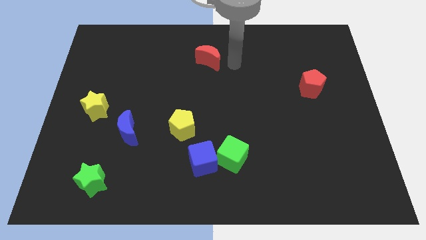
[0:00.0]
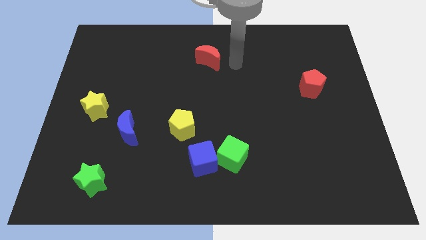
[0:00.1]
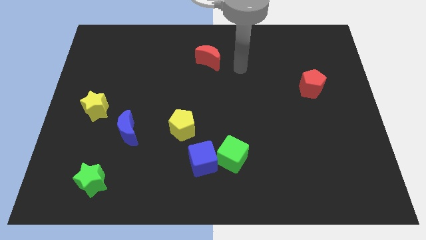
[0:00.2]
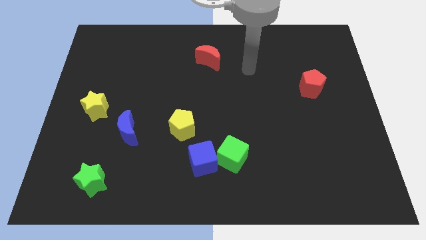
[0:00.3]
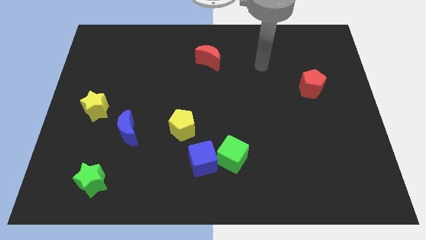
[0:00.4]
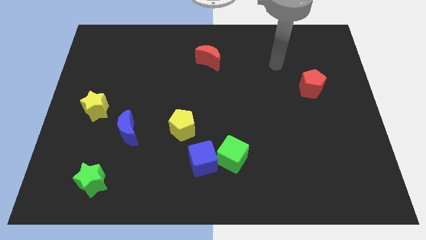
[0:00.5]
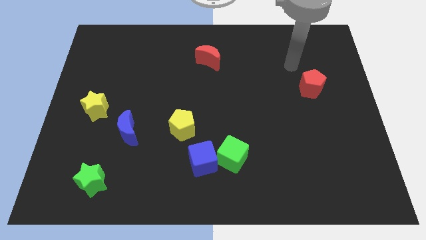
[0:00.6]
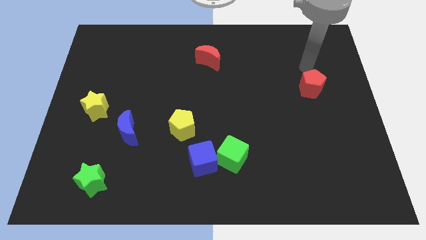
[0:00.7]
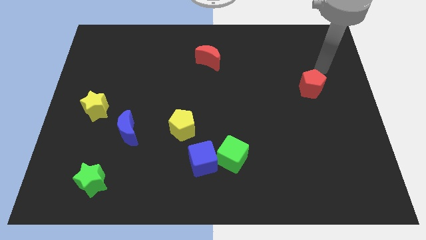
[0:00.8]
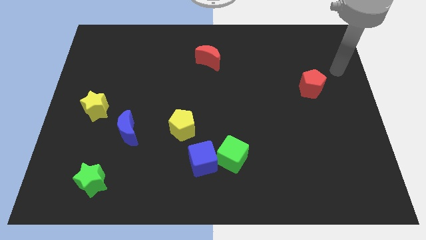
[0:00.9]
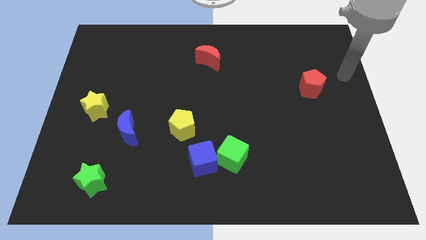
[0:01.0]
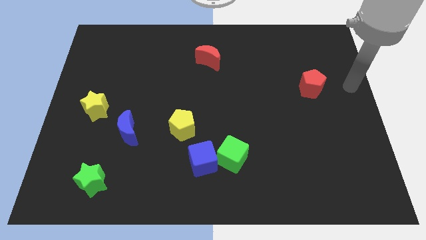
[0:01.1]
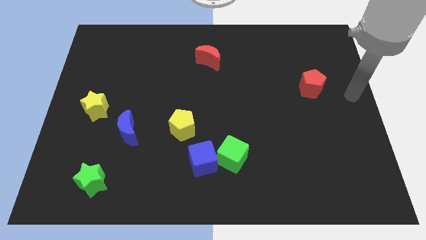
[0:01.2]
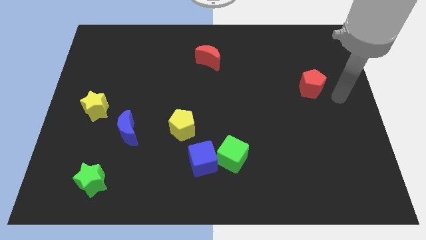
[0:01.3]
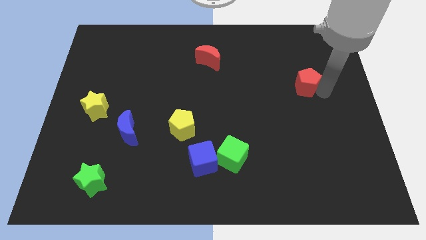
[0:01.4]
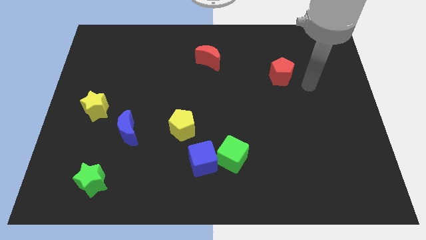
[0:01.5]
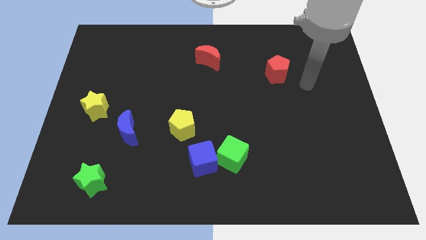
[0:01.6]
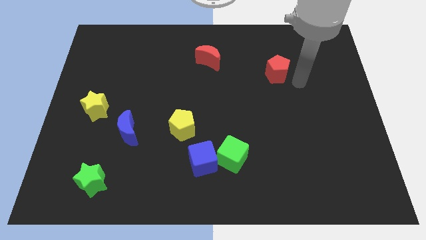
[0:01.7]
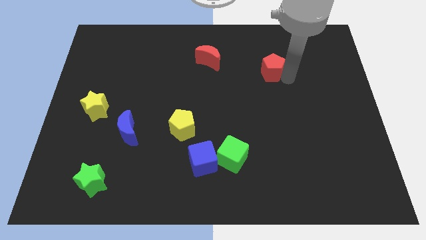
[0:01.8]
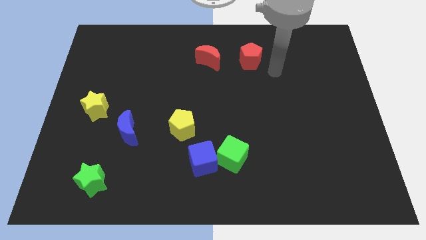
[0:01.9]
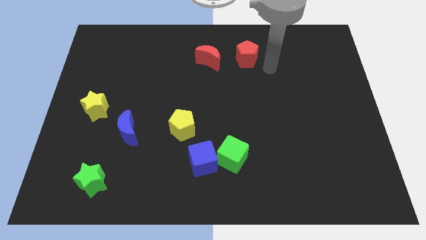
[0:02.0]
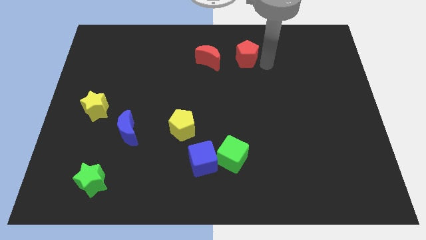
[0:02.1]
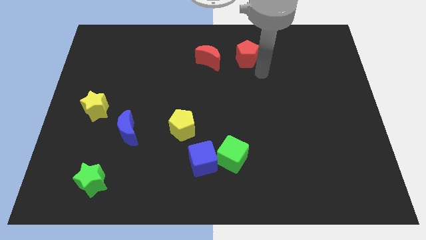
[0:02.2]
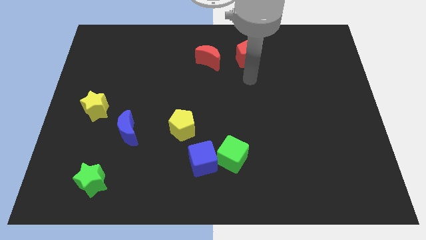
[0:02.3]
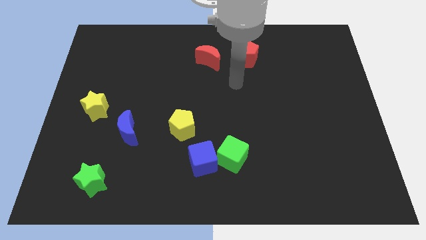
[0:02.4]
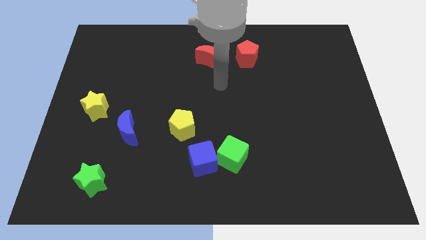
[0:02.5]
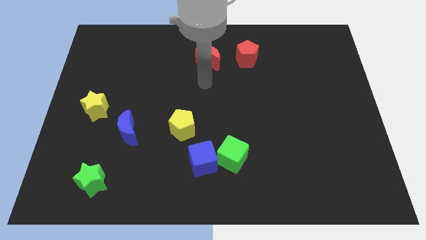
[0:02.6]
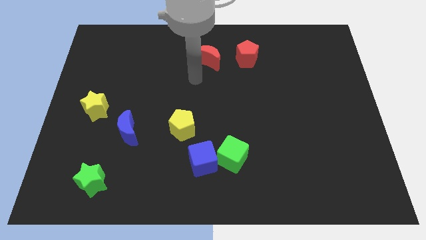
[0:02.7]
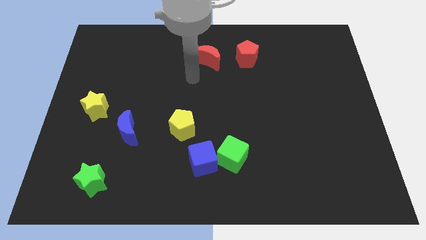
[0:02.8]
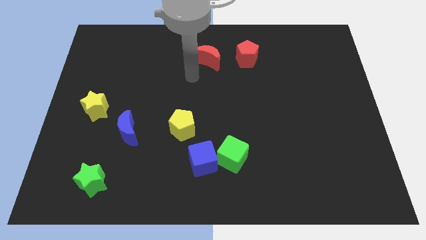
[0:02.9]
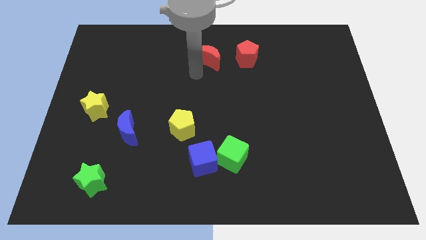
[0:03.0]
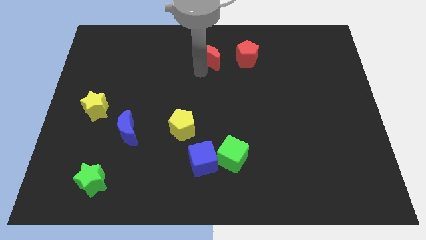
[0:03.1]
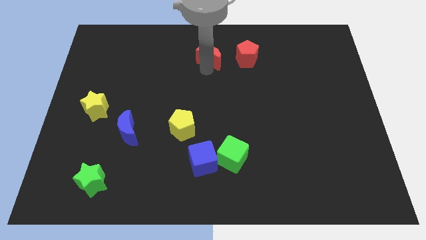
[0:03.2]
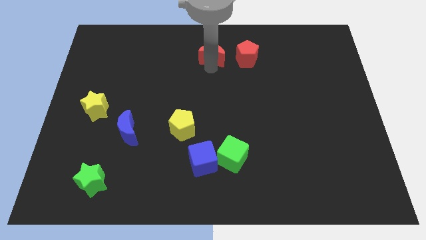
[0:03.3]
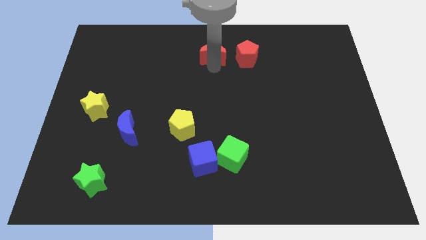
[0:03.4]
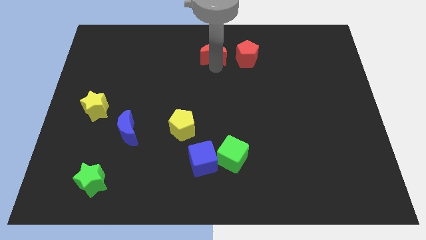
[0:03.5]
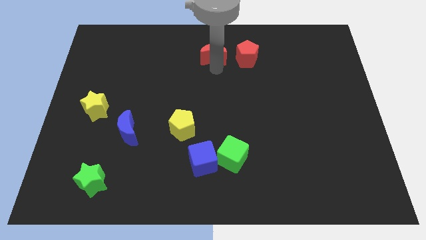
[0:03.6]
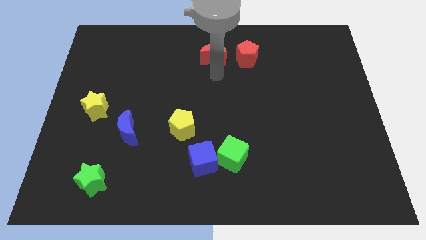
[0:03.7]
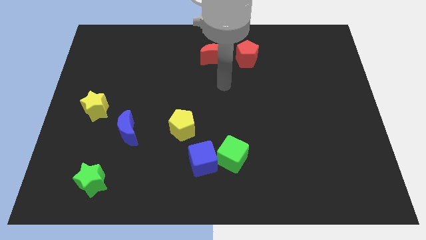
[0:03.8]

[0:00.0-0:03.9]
place the red pentagon to the right of red crescent

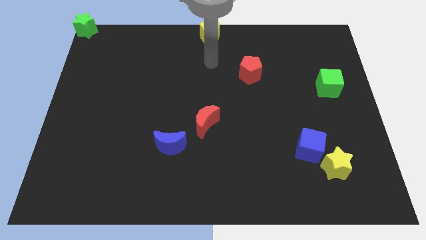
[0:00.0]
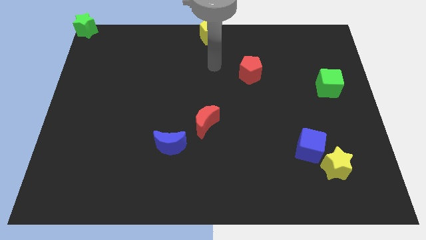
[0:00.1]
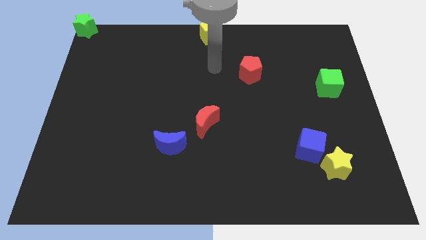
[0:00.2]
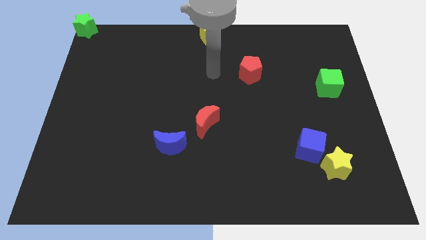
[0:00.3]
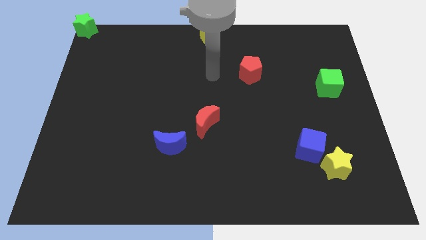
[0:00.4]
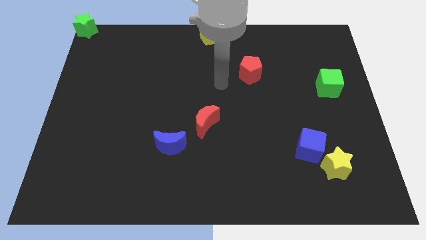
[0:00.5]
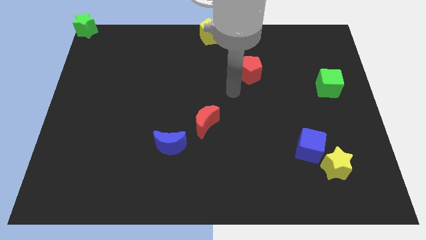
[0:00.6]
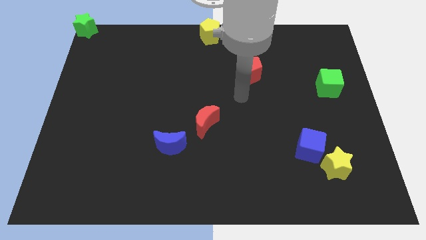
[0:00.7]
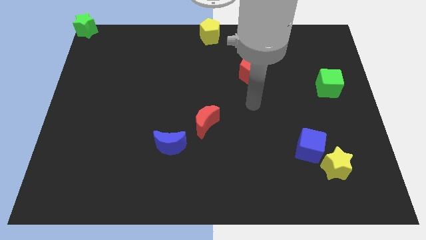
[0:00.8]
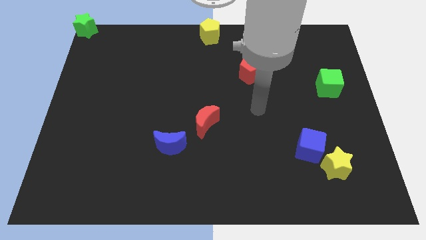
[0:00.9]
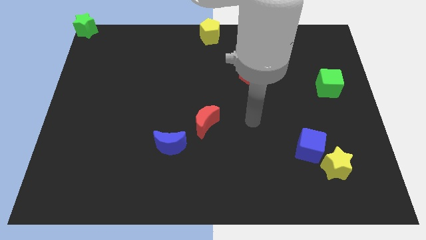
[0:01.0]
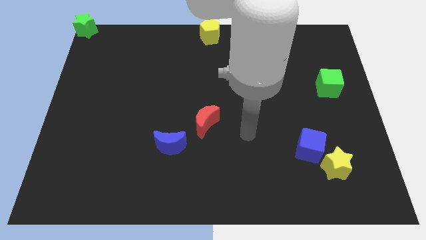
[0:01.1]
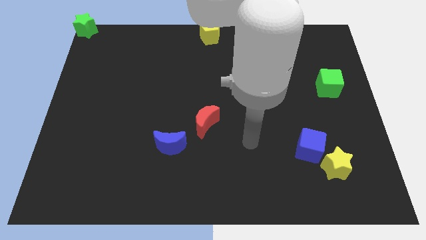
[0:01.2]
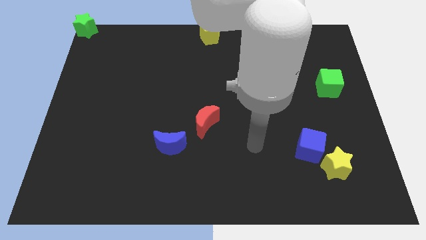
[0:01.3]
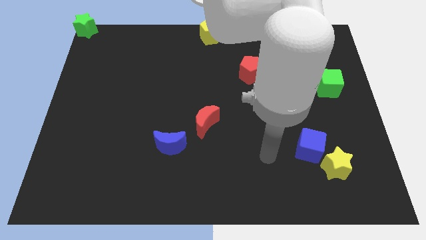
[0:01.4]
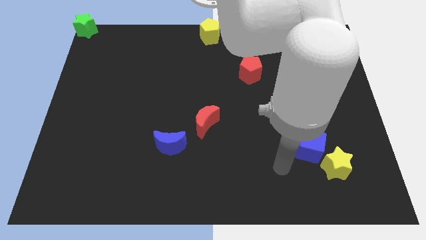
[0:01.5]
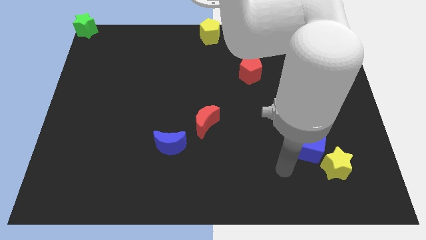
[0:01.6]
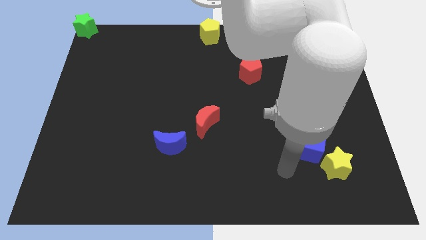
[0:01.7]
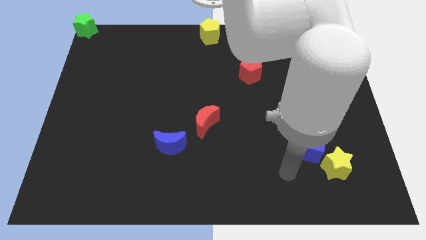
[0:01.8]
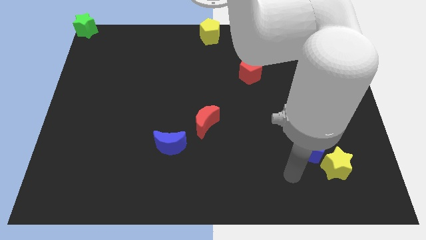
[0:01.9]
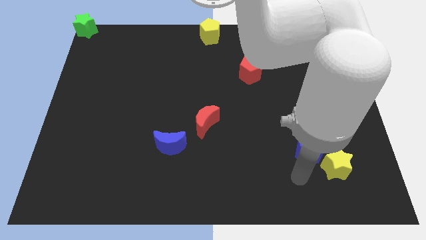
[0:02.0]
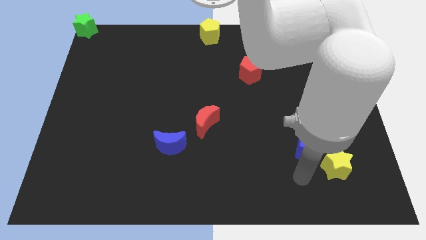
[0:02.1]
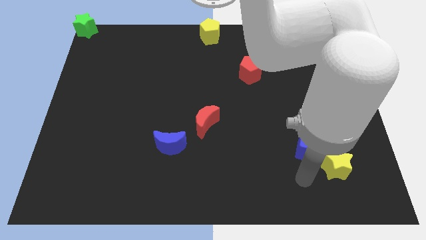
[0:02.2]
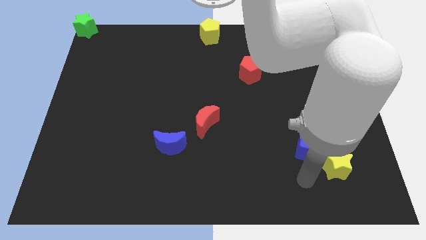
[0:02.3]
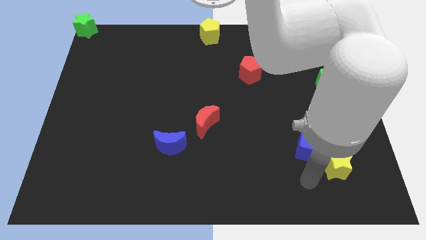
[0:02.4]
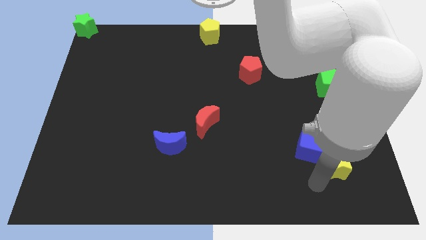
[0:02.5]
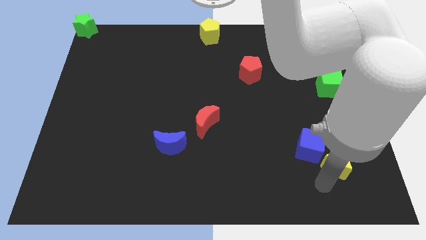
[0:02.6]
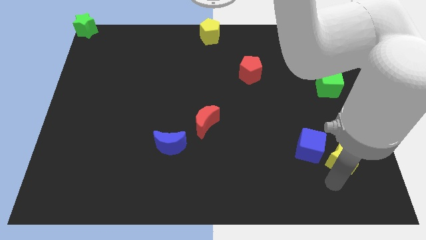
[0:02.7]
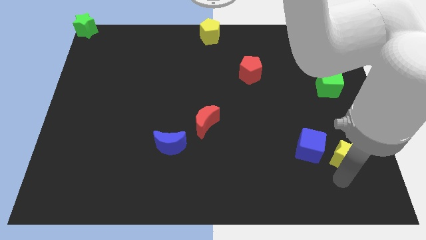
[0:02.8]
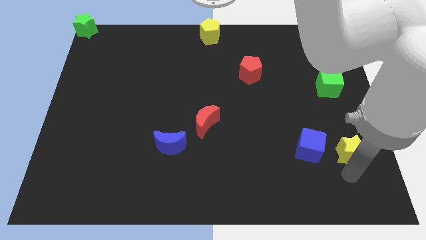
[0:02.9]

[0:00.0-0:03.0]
place the arm down to the yellow star

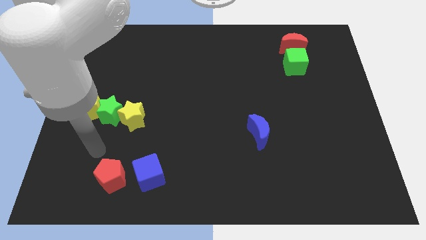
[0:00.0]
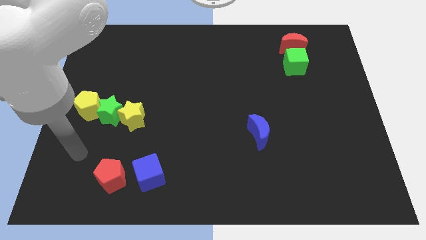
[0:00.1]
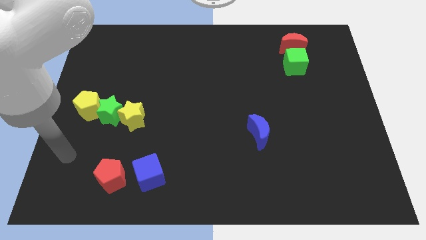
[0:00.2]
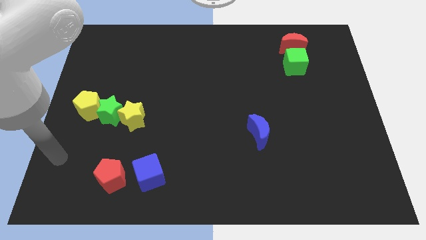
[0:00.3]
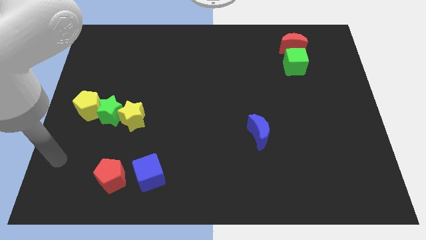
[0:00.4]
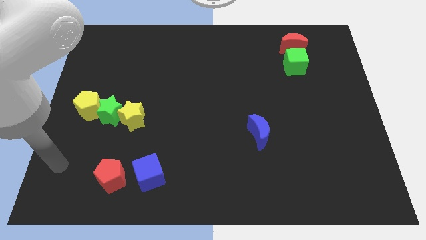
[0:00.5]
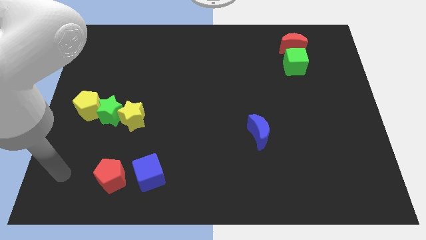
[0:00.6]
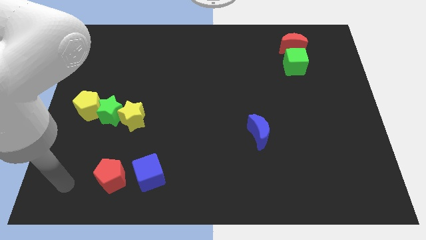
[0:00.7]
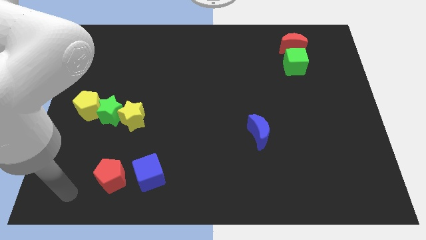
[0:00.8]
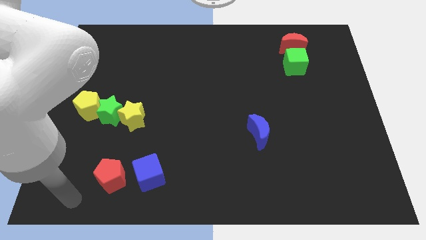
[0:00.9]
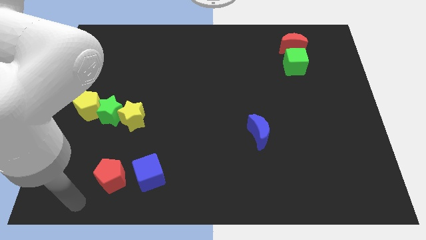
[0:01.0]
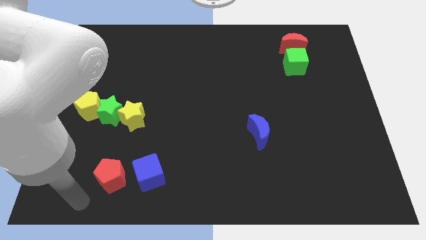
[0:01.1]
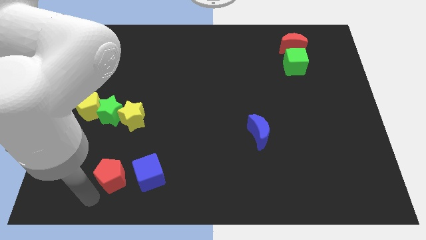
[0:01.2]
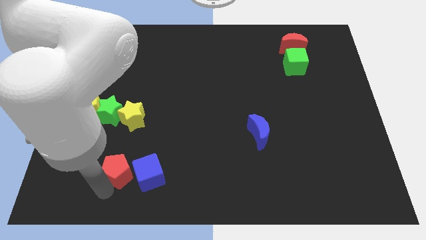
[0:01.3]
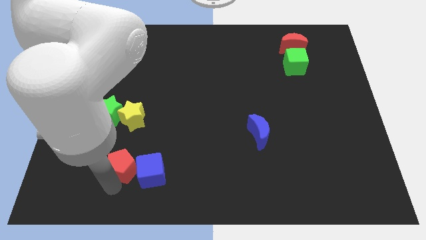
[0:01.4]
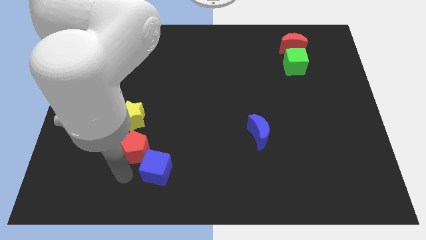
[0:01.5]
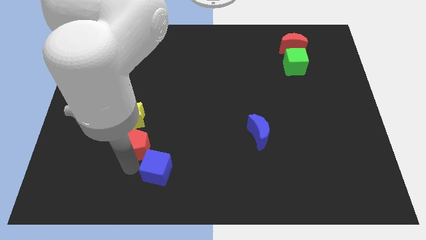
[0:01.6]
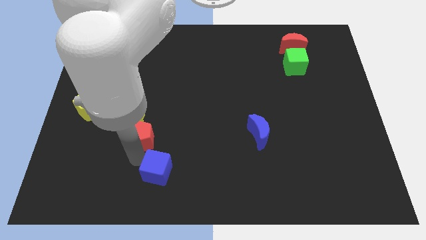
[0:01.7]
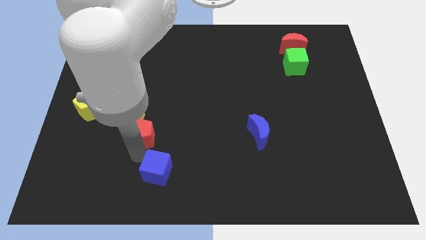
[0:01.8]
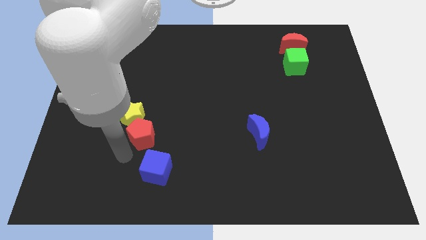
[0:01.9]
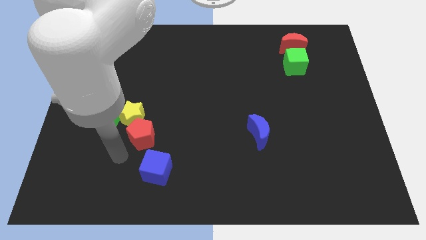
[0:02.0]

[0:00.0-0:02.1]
place the red pentagon diagonally in between the yellow star and blue cube

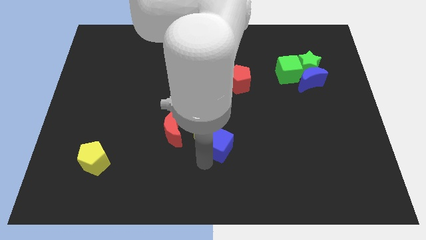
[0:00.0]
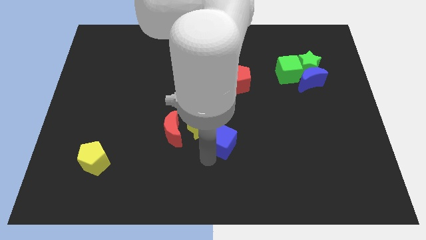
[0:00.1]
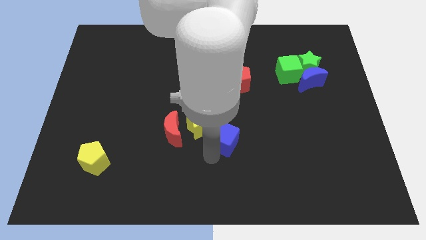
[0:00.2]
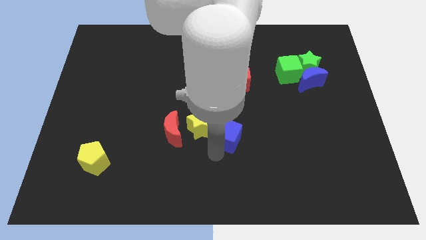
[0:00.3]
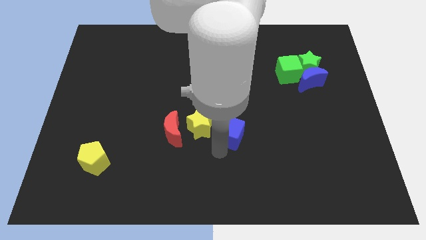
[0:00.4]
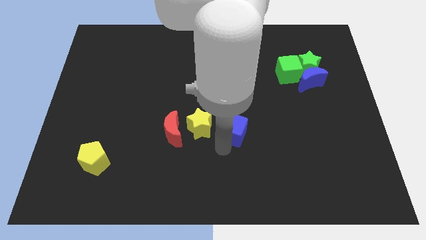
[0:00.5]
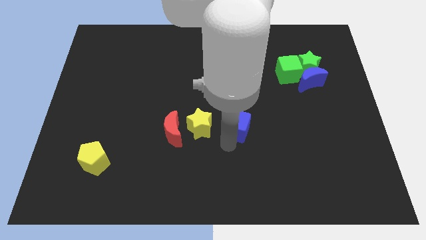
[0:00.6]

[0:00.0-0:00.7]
place the blue cube vertically below to the red pentagon
